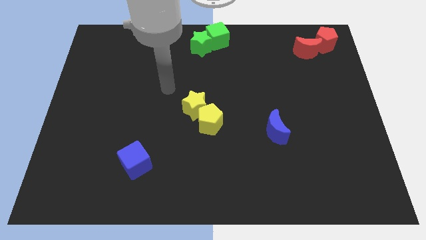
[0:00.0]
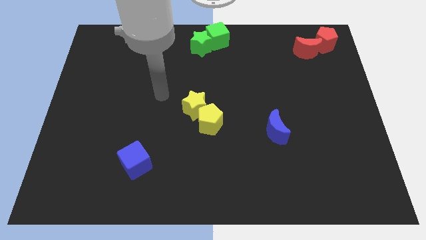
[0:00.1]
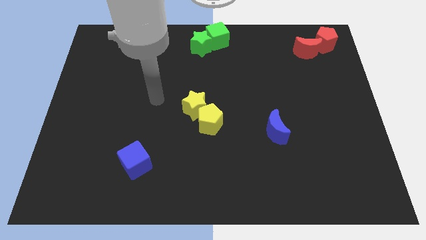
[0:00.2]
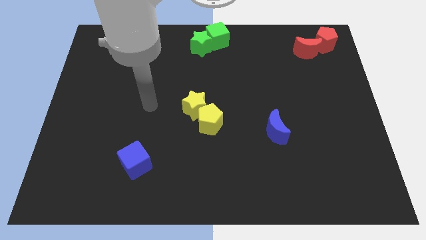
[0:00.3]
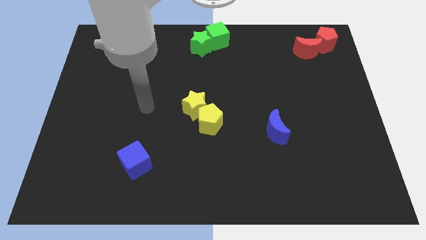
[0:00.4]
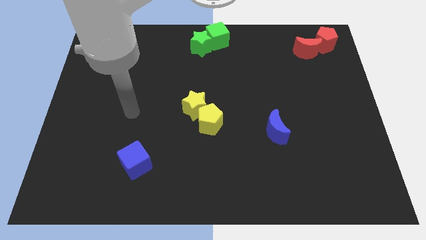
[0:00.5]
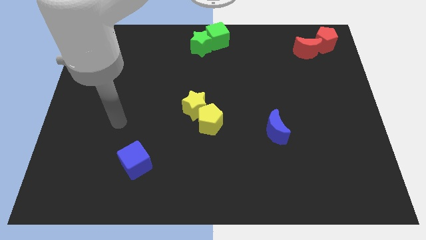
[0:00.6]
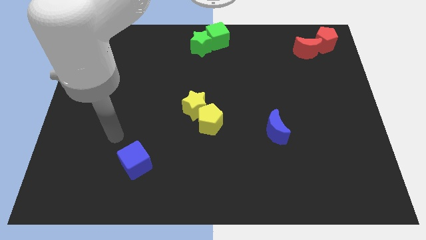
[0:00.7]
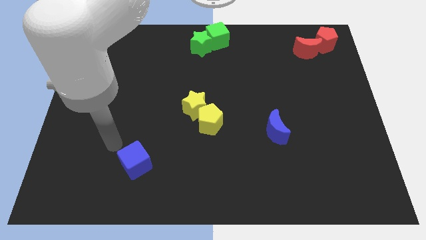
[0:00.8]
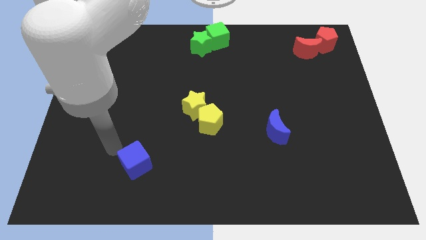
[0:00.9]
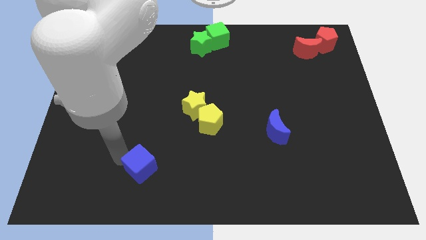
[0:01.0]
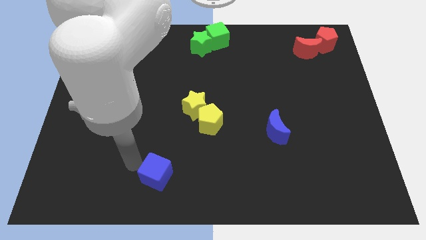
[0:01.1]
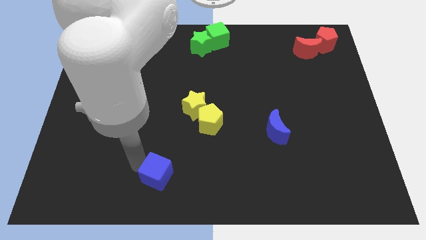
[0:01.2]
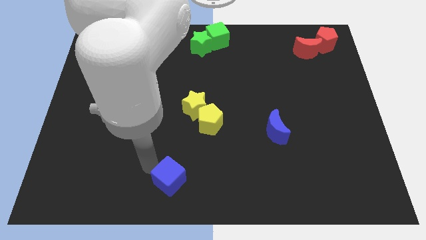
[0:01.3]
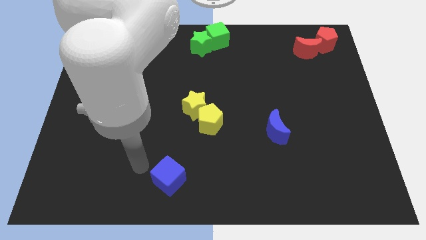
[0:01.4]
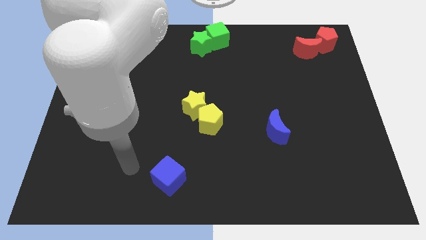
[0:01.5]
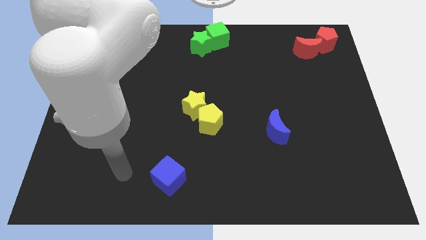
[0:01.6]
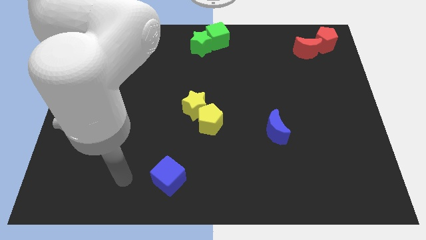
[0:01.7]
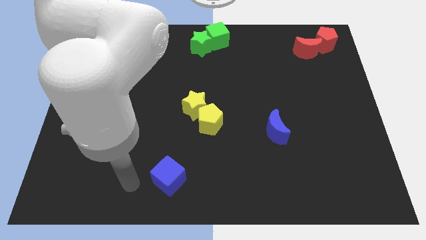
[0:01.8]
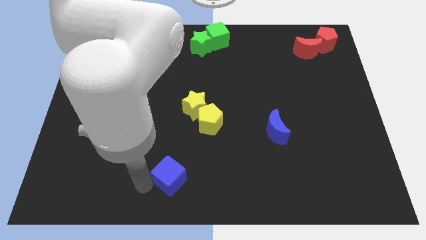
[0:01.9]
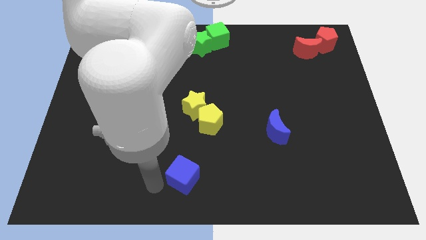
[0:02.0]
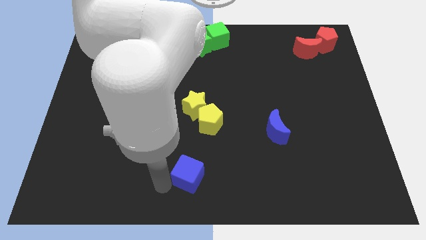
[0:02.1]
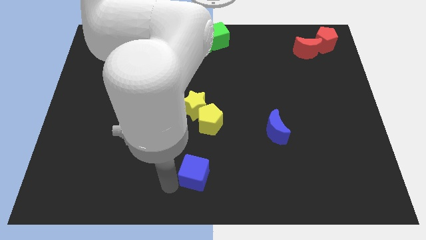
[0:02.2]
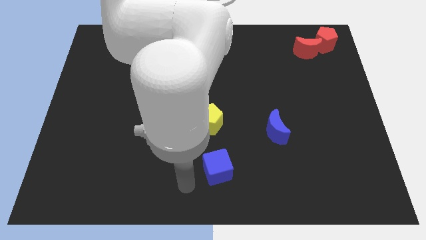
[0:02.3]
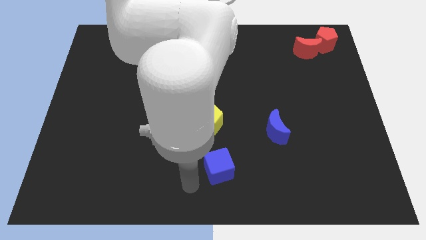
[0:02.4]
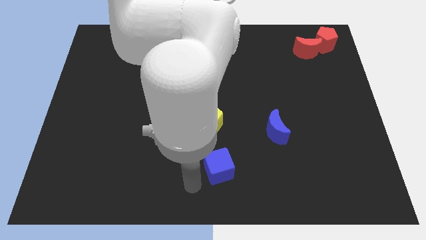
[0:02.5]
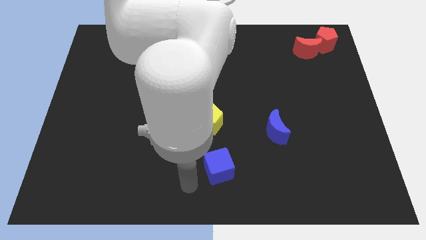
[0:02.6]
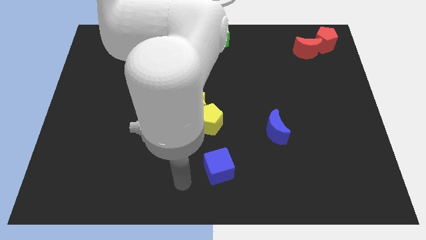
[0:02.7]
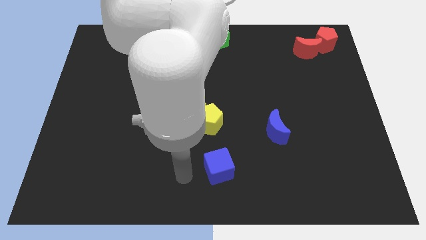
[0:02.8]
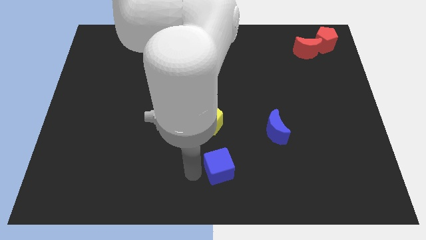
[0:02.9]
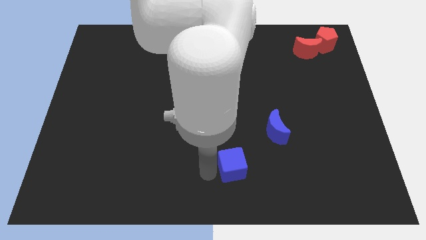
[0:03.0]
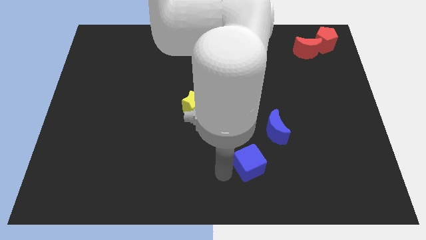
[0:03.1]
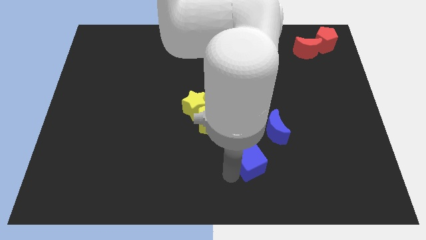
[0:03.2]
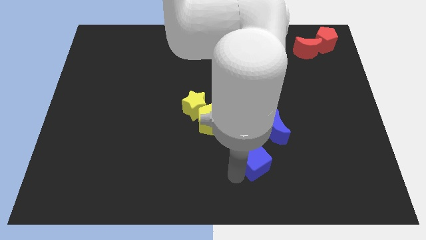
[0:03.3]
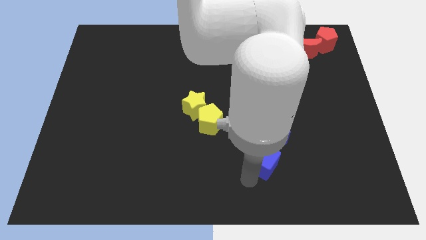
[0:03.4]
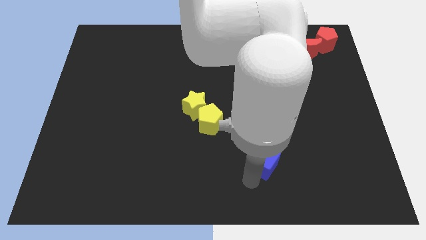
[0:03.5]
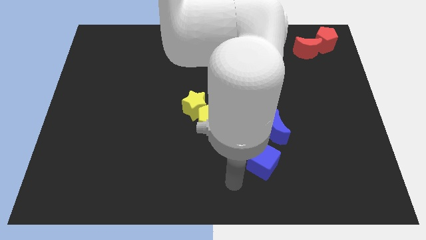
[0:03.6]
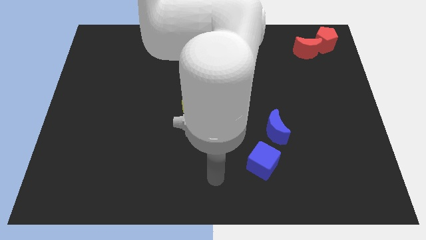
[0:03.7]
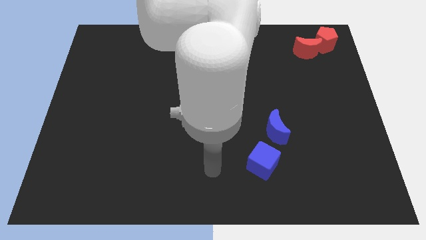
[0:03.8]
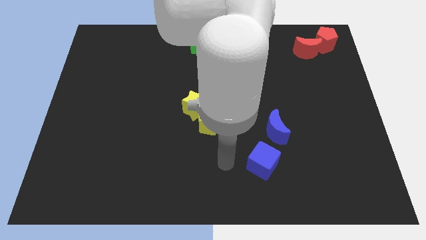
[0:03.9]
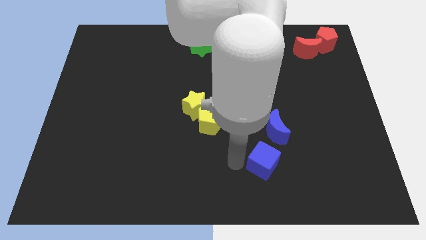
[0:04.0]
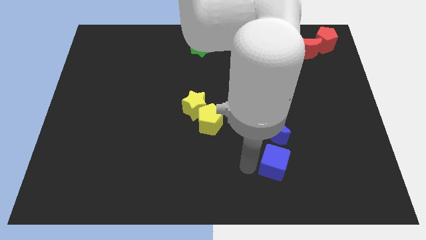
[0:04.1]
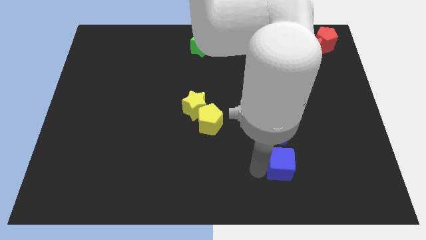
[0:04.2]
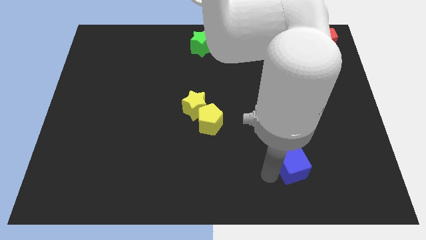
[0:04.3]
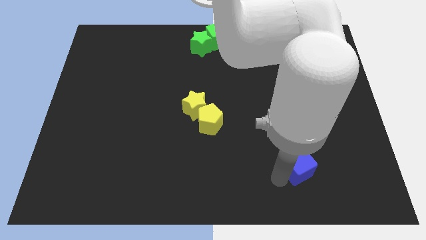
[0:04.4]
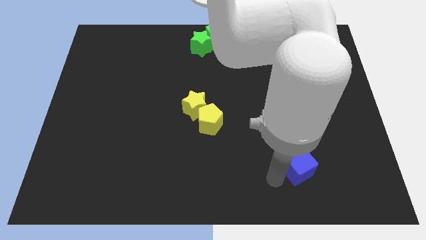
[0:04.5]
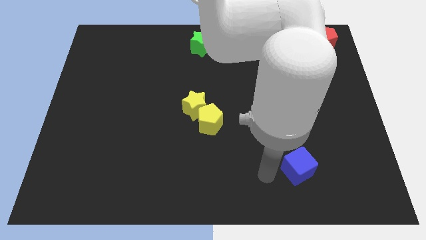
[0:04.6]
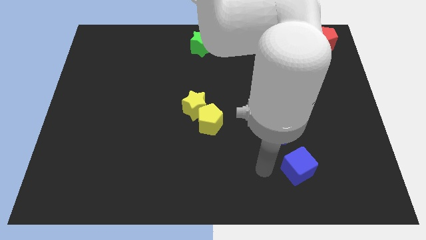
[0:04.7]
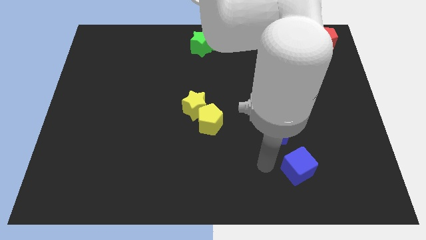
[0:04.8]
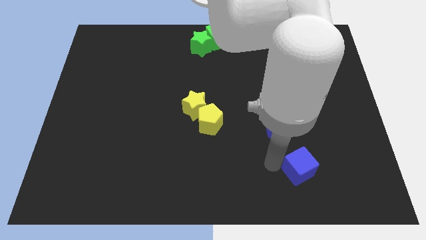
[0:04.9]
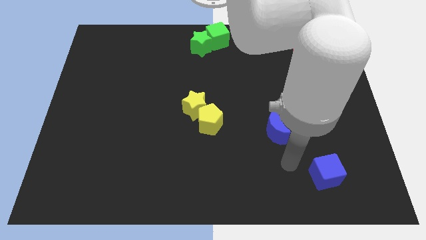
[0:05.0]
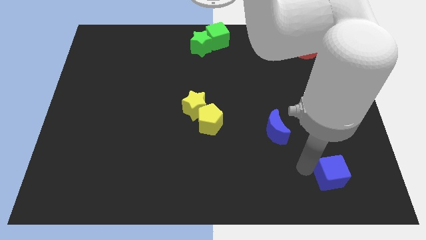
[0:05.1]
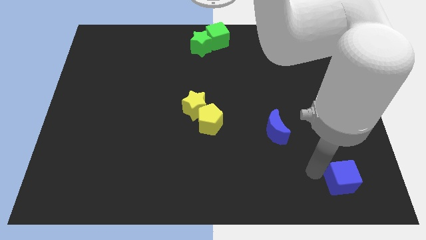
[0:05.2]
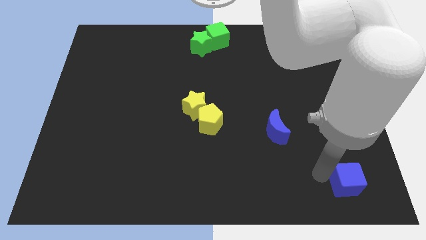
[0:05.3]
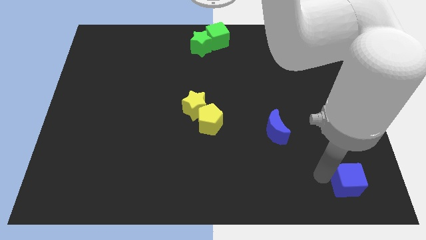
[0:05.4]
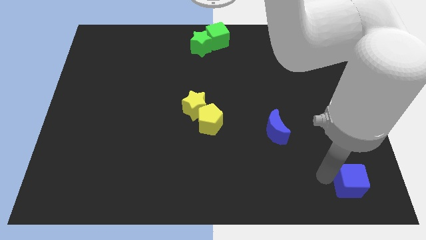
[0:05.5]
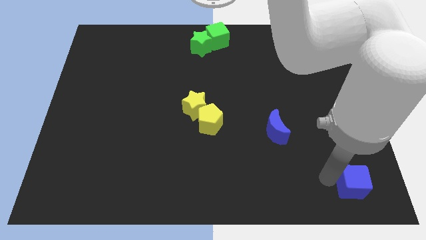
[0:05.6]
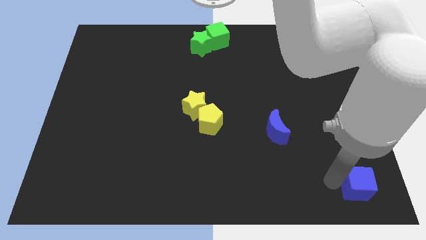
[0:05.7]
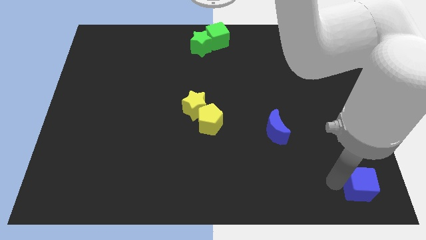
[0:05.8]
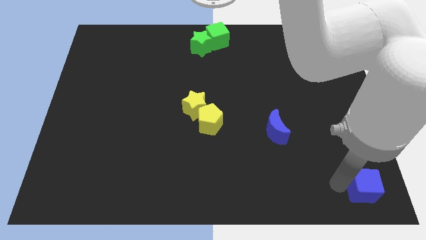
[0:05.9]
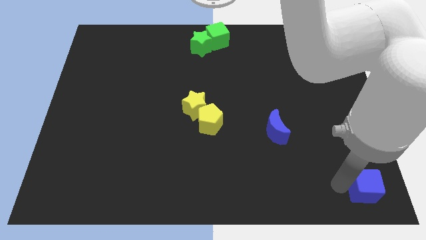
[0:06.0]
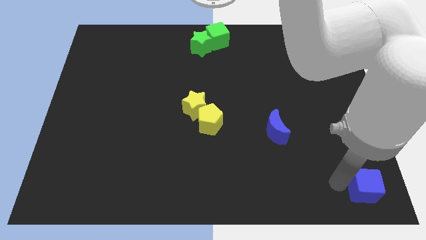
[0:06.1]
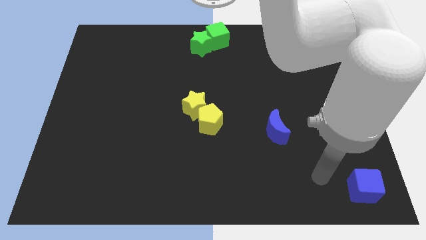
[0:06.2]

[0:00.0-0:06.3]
move the blue cube to the bottom right corner of the board

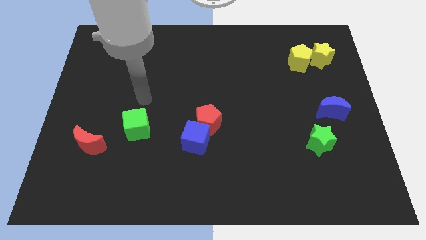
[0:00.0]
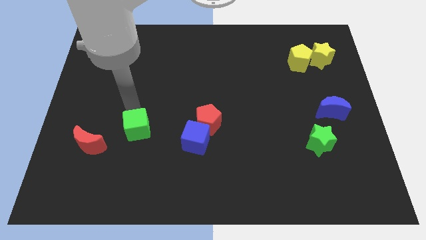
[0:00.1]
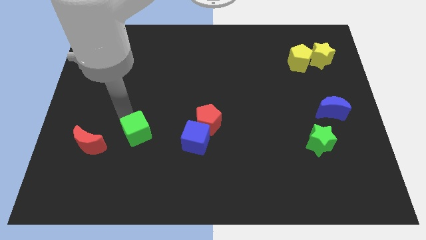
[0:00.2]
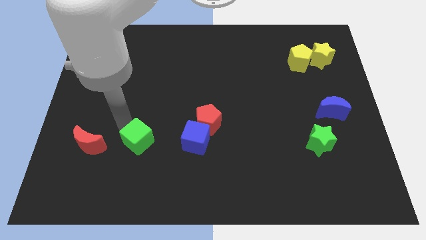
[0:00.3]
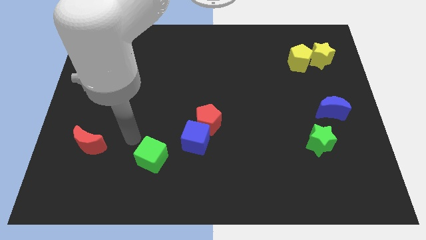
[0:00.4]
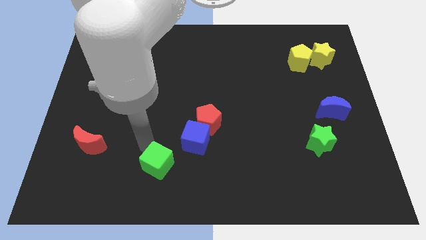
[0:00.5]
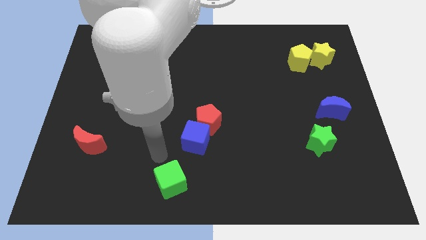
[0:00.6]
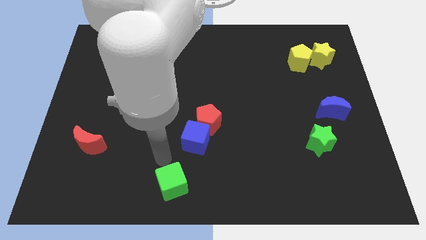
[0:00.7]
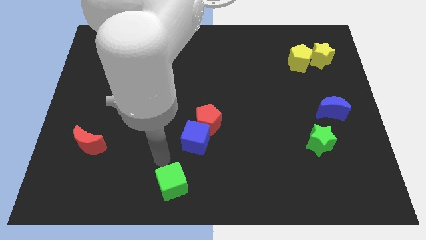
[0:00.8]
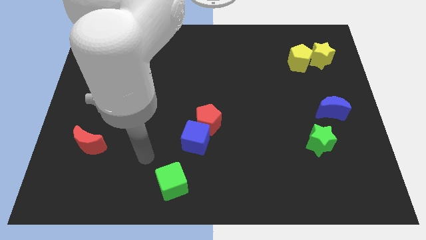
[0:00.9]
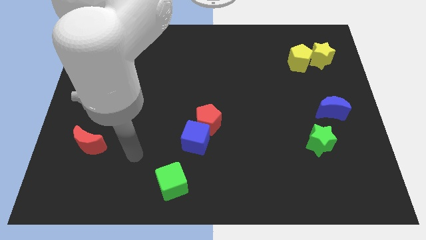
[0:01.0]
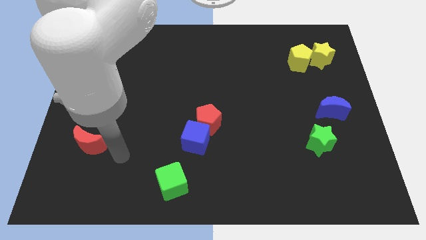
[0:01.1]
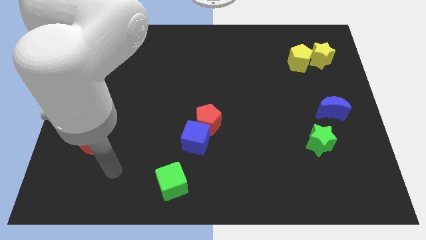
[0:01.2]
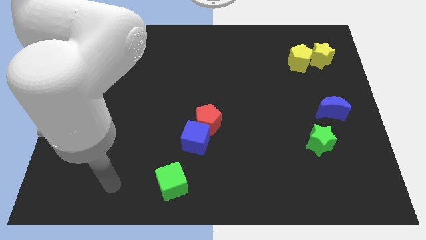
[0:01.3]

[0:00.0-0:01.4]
push the green cube towards the bottom centre of the board

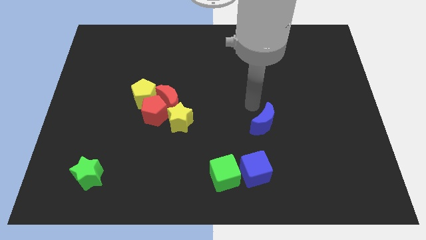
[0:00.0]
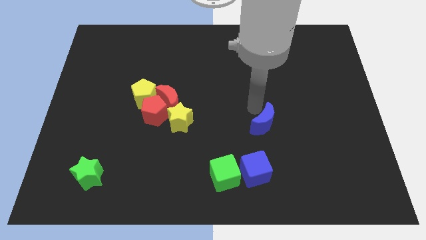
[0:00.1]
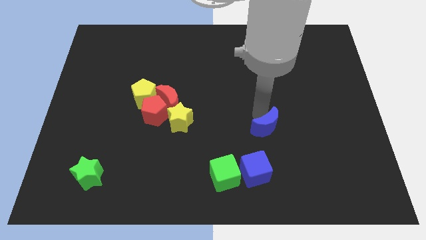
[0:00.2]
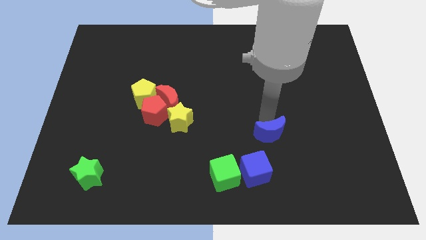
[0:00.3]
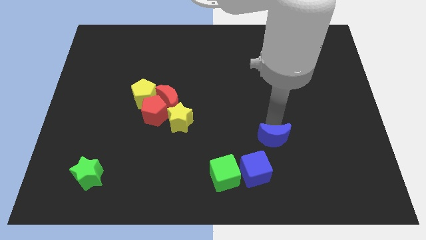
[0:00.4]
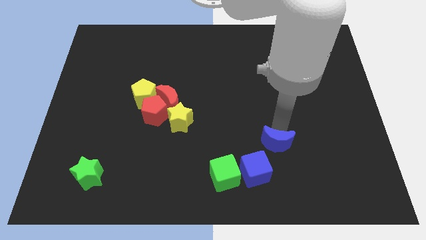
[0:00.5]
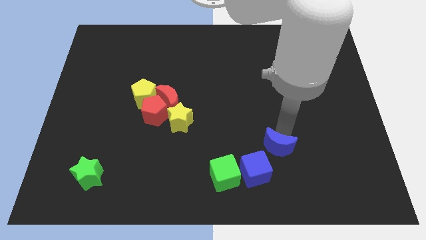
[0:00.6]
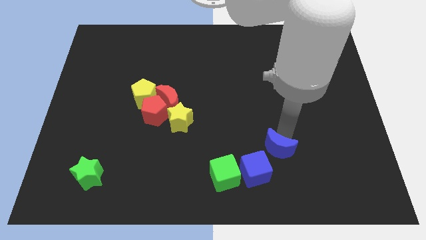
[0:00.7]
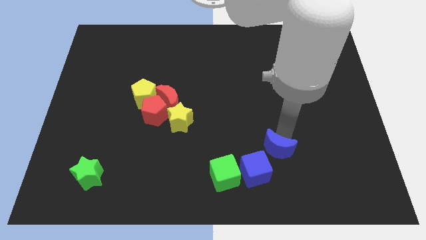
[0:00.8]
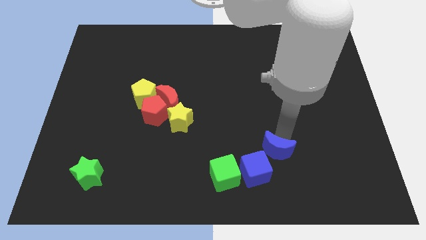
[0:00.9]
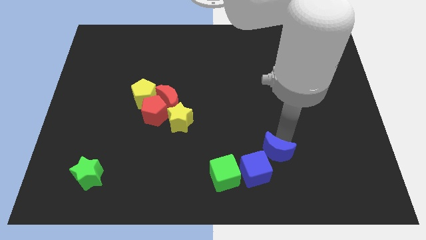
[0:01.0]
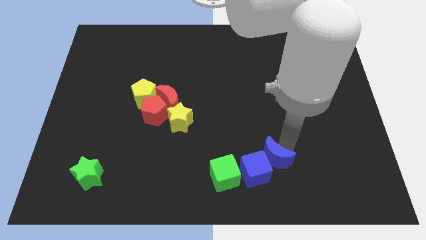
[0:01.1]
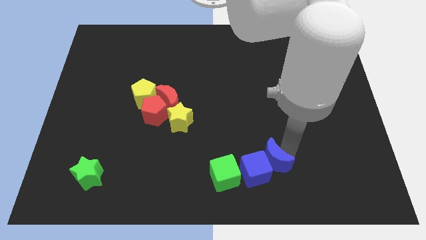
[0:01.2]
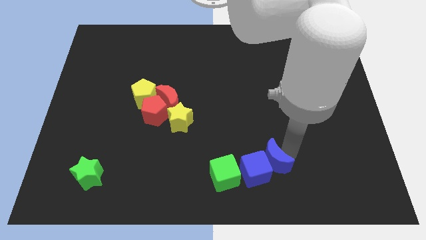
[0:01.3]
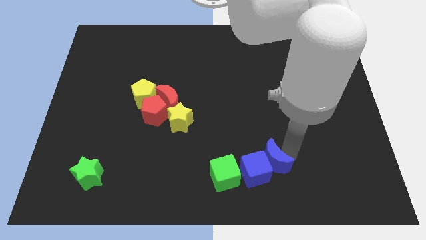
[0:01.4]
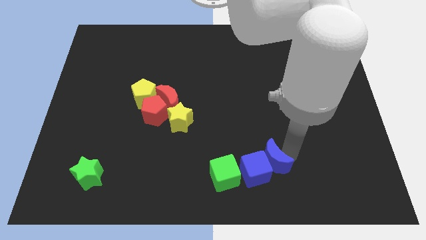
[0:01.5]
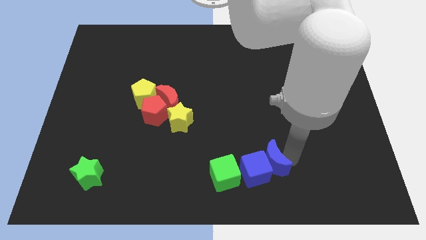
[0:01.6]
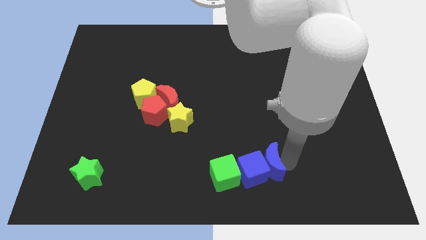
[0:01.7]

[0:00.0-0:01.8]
place blue crescent into the blue cube
